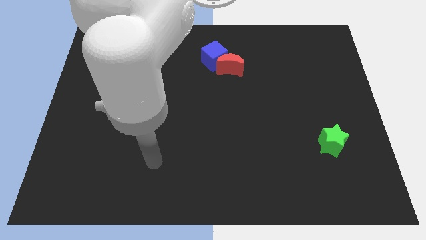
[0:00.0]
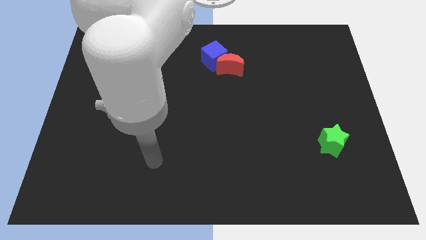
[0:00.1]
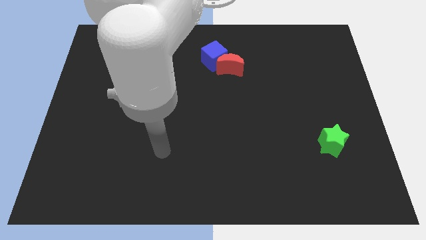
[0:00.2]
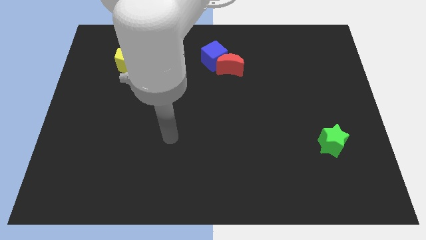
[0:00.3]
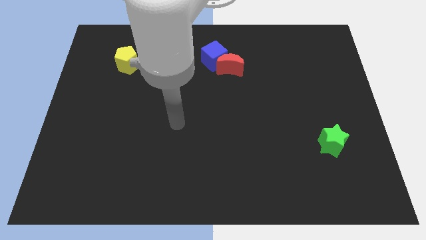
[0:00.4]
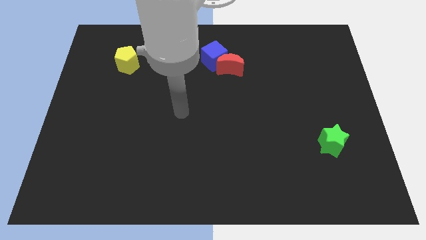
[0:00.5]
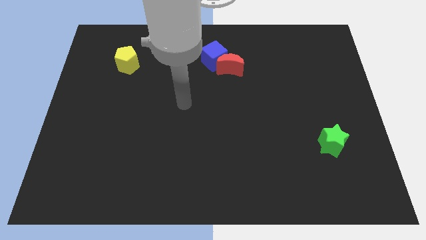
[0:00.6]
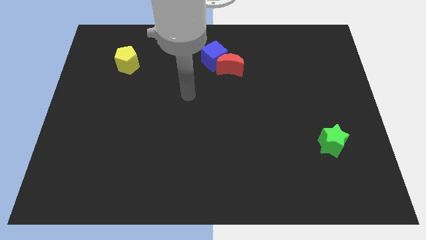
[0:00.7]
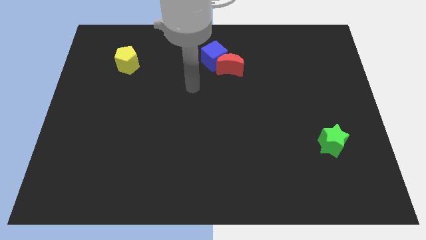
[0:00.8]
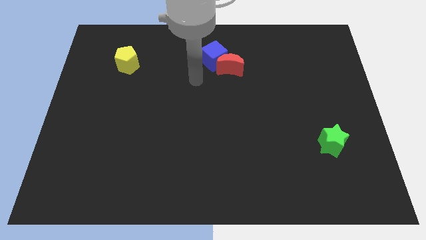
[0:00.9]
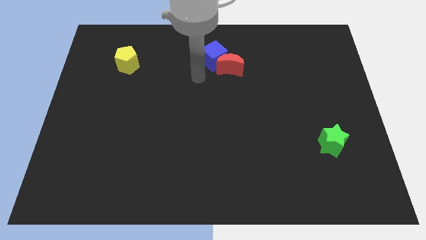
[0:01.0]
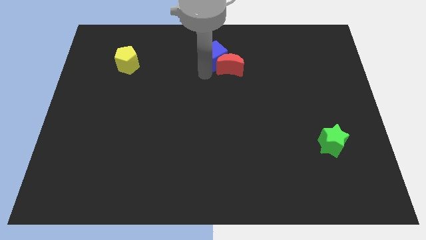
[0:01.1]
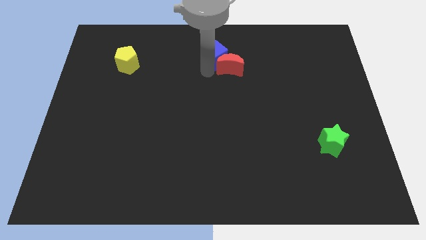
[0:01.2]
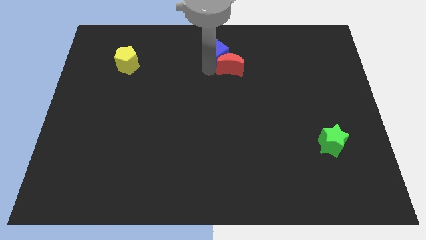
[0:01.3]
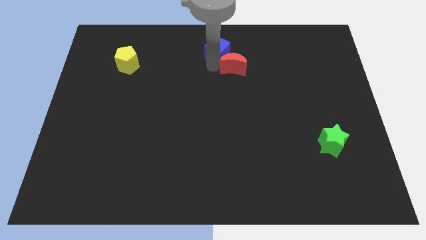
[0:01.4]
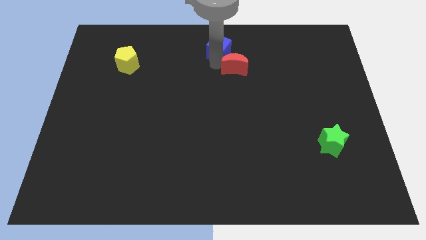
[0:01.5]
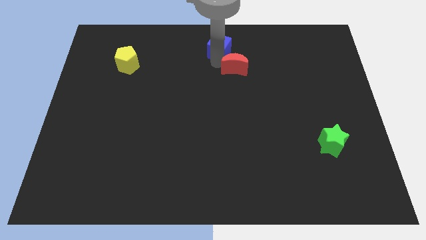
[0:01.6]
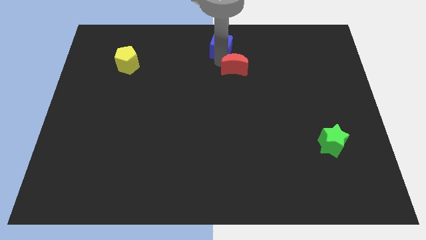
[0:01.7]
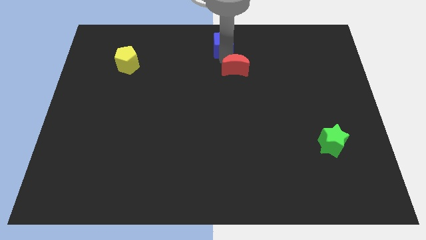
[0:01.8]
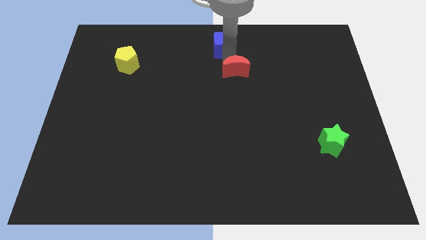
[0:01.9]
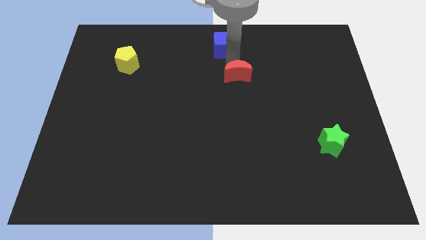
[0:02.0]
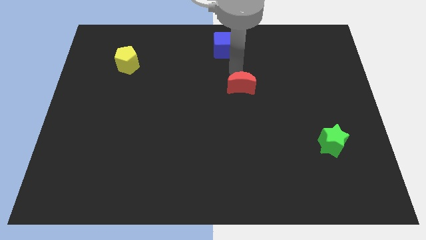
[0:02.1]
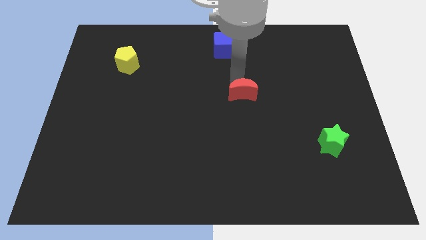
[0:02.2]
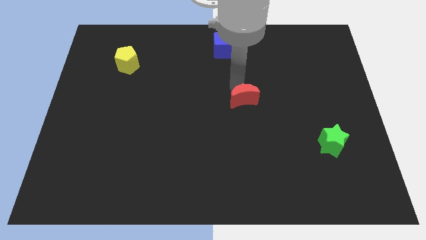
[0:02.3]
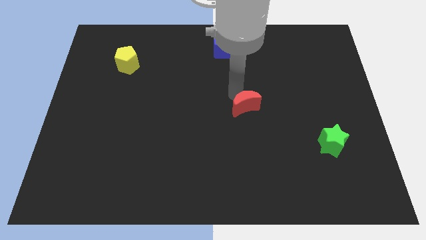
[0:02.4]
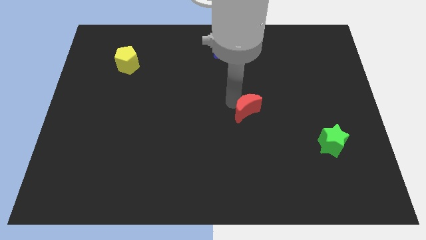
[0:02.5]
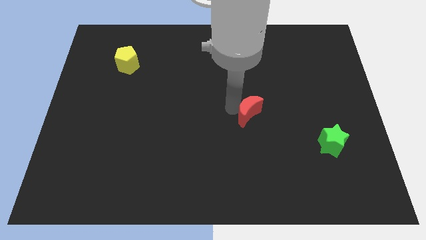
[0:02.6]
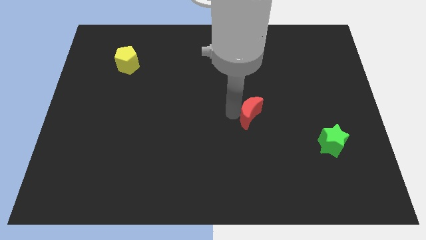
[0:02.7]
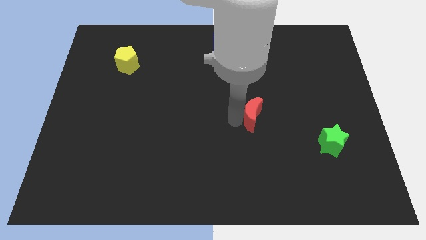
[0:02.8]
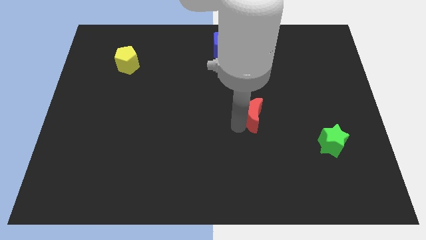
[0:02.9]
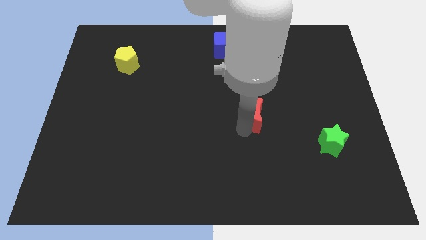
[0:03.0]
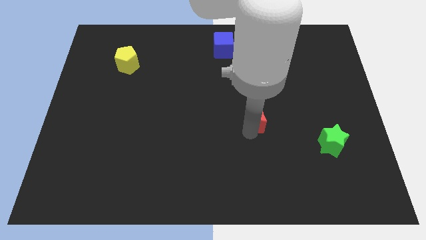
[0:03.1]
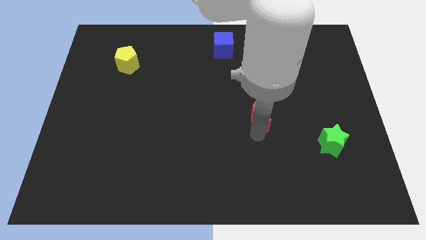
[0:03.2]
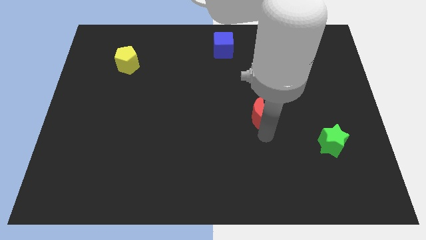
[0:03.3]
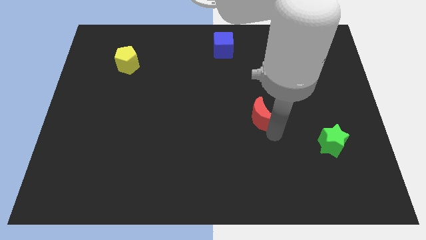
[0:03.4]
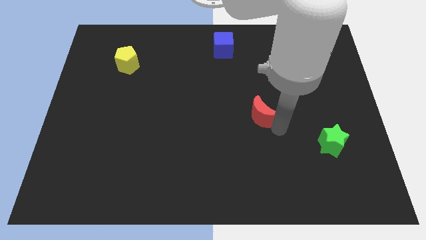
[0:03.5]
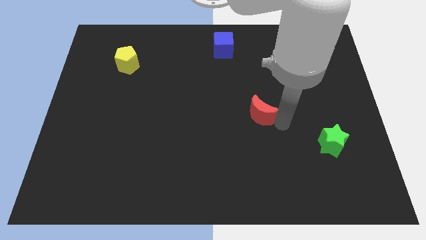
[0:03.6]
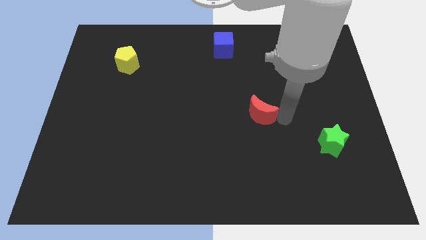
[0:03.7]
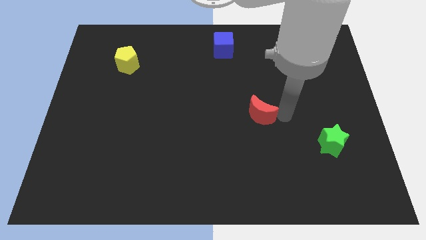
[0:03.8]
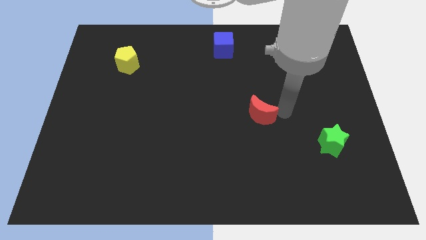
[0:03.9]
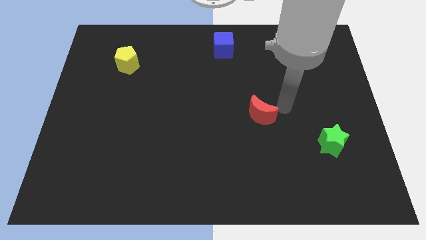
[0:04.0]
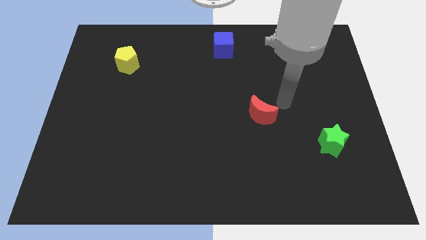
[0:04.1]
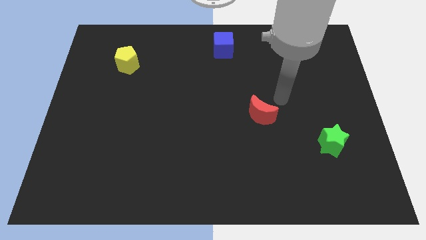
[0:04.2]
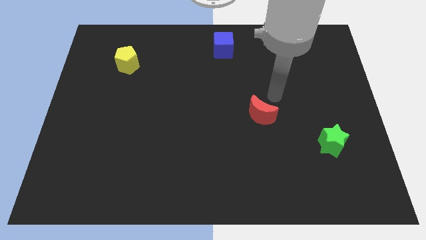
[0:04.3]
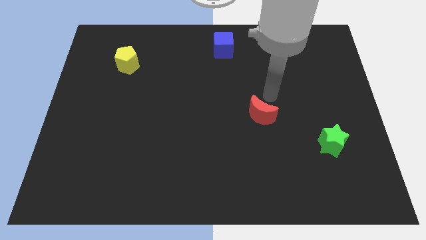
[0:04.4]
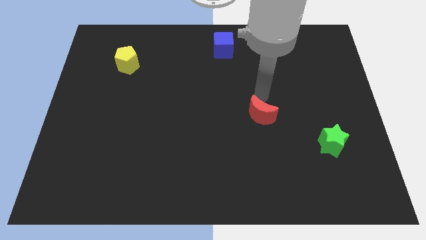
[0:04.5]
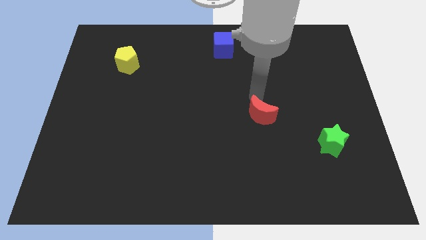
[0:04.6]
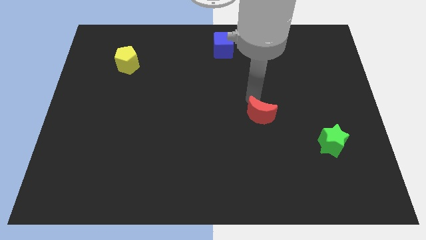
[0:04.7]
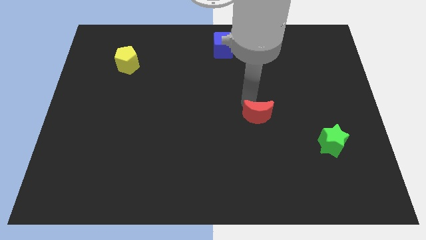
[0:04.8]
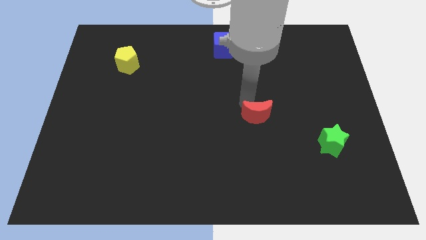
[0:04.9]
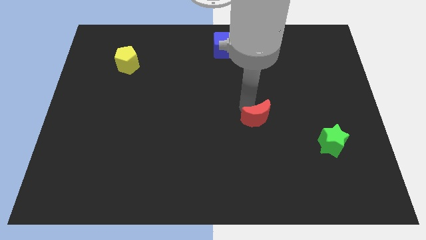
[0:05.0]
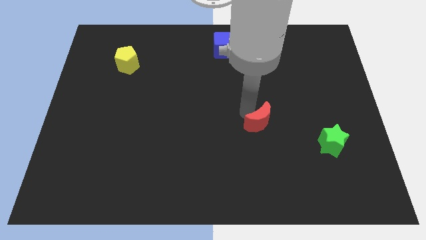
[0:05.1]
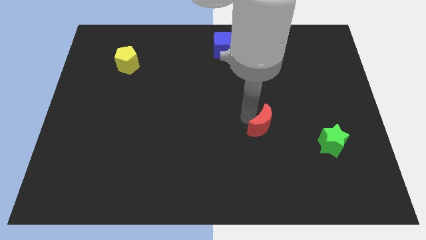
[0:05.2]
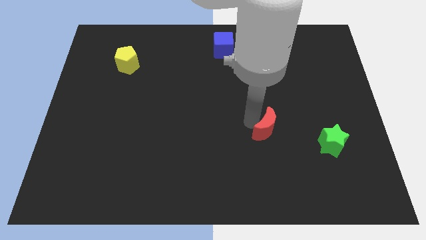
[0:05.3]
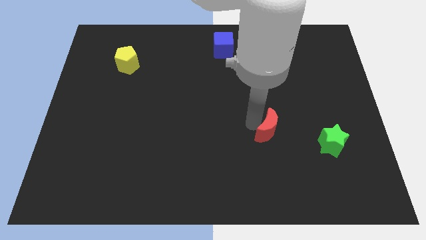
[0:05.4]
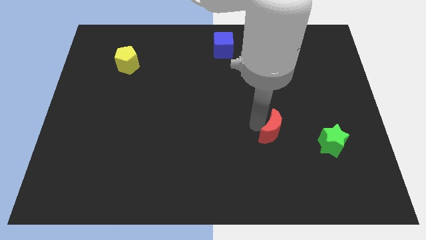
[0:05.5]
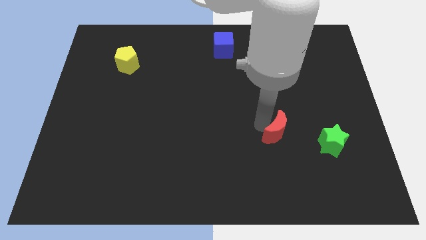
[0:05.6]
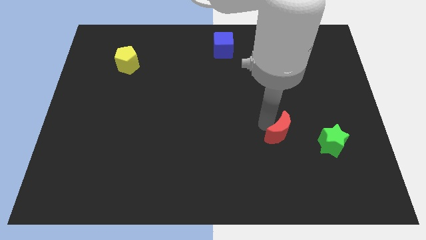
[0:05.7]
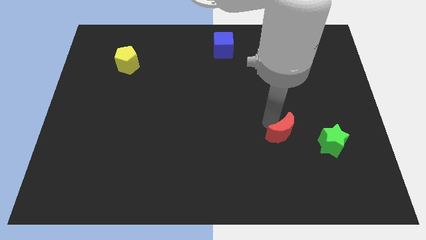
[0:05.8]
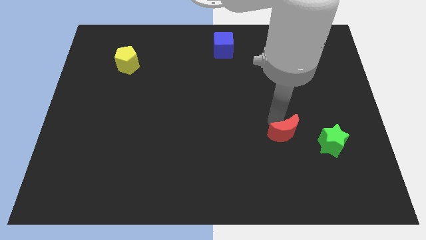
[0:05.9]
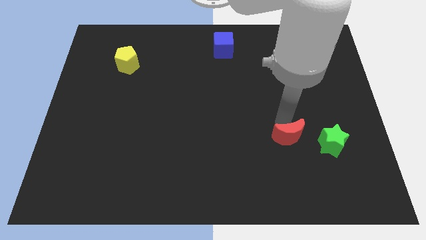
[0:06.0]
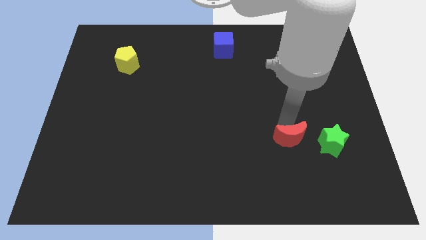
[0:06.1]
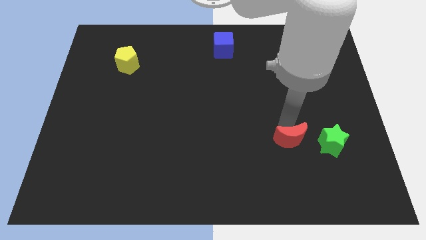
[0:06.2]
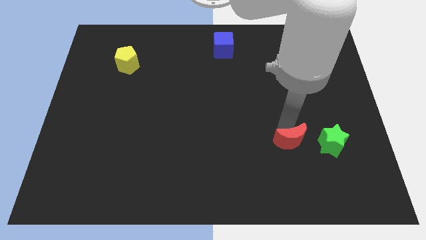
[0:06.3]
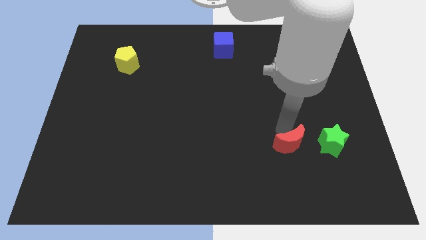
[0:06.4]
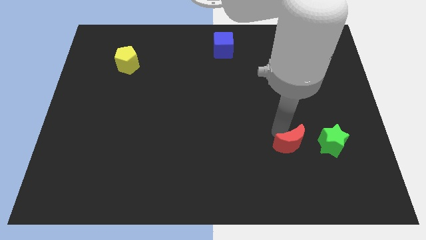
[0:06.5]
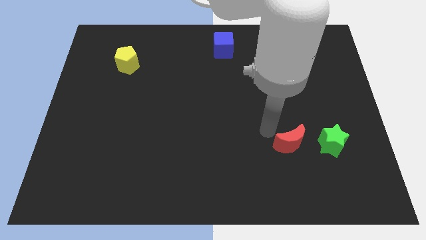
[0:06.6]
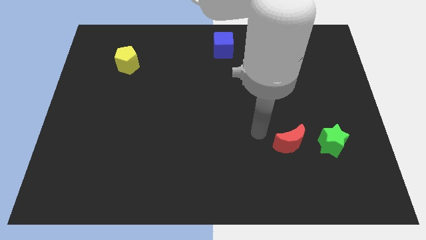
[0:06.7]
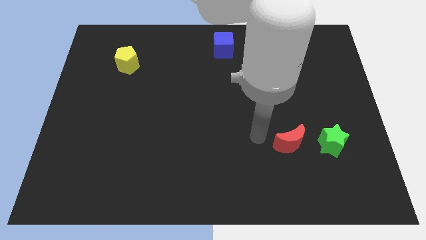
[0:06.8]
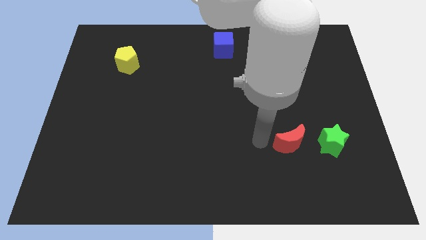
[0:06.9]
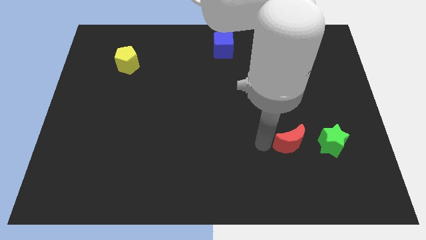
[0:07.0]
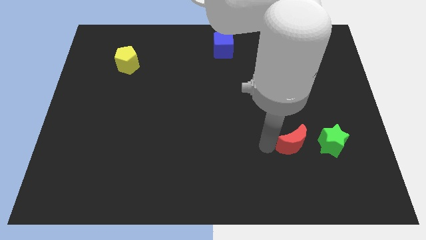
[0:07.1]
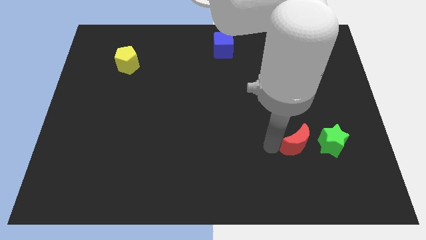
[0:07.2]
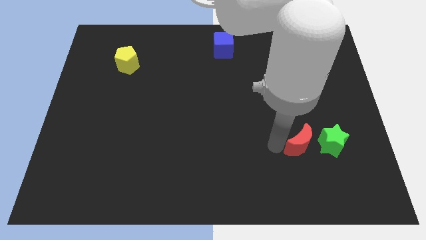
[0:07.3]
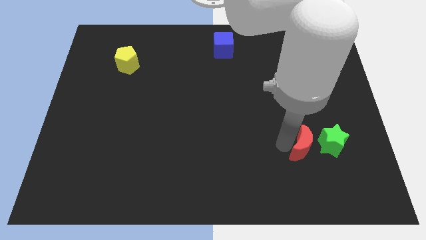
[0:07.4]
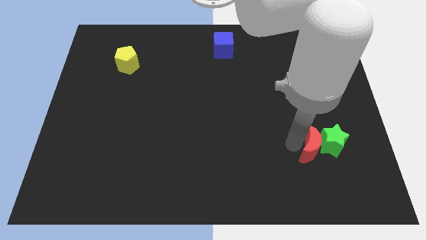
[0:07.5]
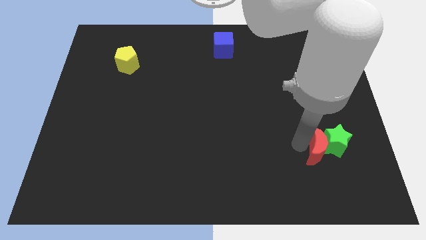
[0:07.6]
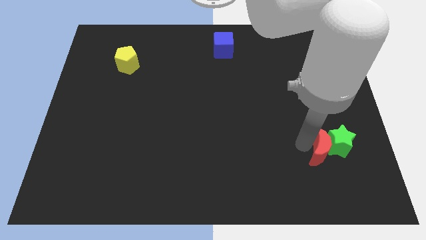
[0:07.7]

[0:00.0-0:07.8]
slide the red block close to the green block

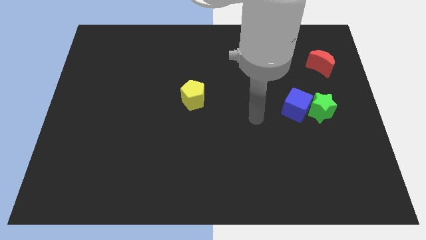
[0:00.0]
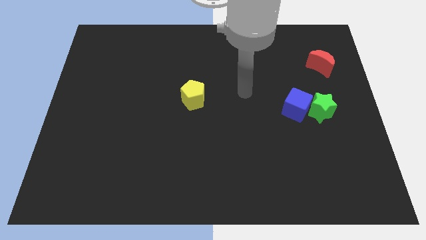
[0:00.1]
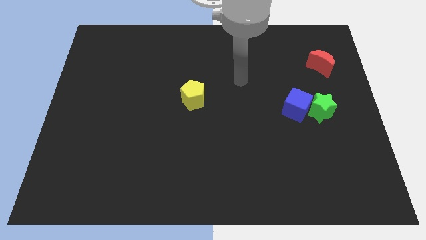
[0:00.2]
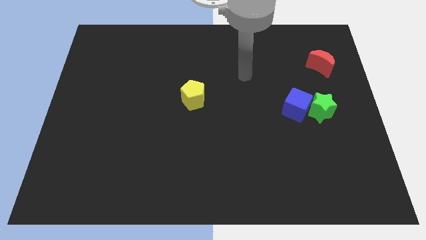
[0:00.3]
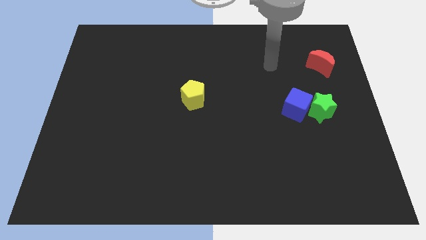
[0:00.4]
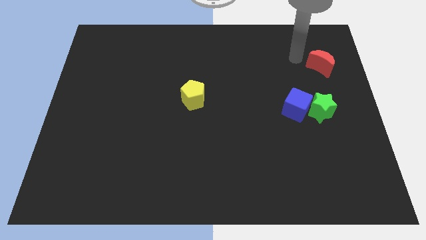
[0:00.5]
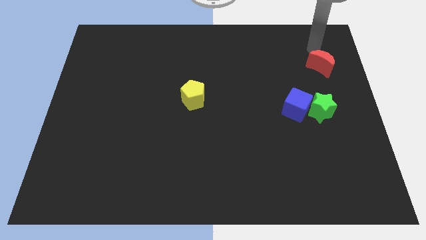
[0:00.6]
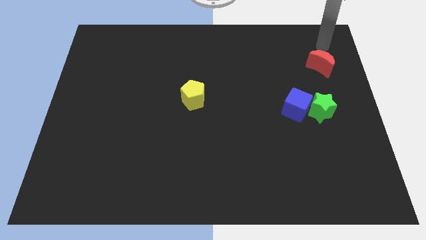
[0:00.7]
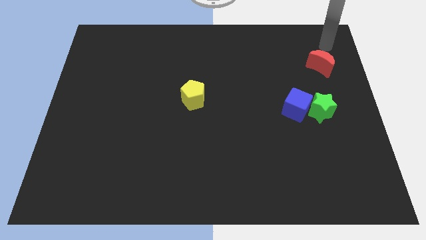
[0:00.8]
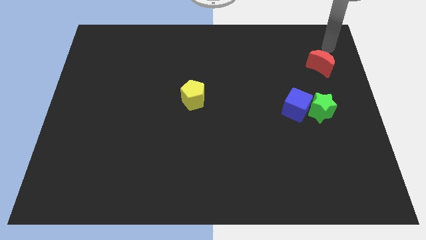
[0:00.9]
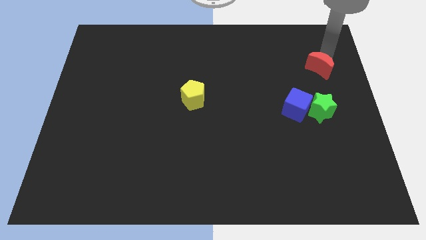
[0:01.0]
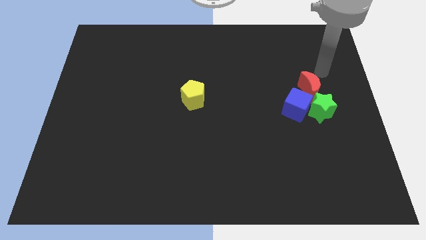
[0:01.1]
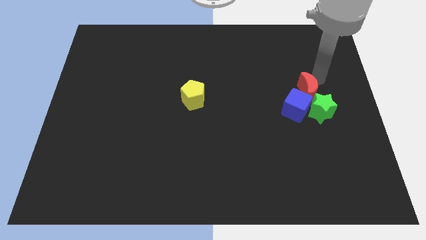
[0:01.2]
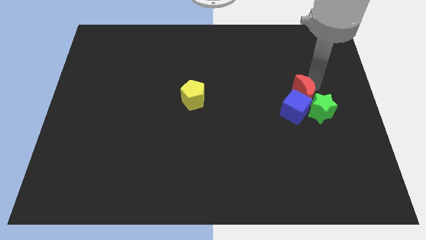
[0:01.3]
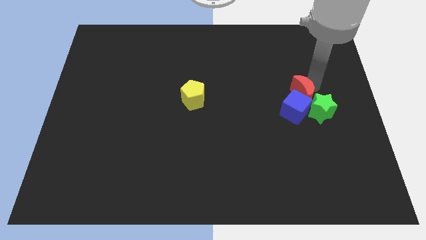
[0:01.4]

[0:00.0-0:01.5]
slide the moon to the blue cube
